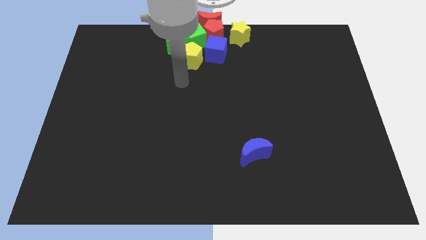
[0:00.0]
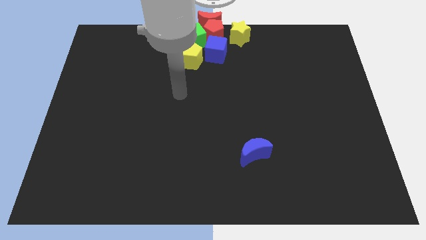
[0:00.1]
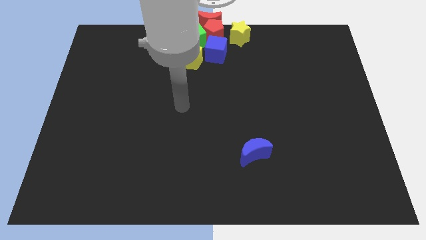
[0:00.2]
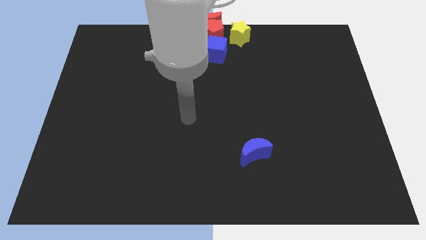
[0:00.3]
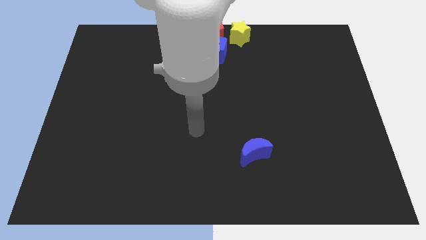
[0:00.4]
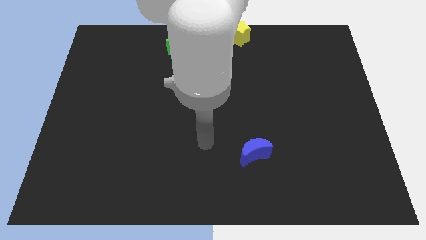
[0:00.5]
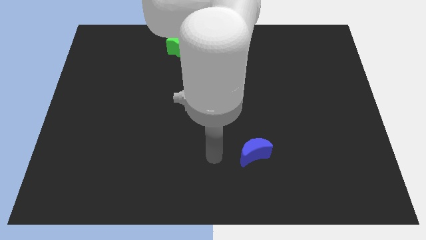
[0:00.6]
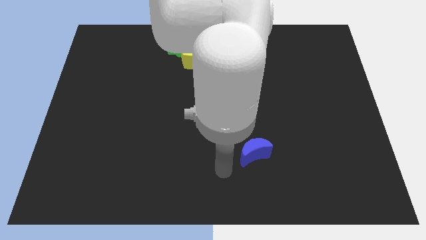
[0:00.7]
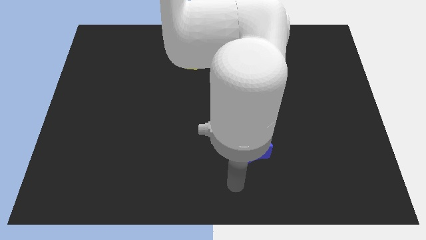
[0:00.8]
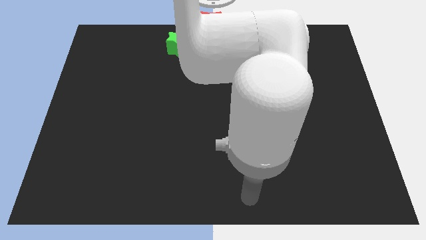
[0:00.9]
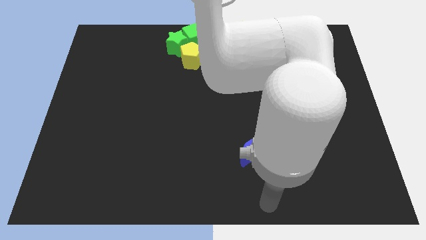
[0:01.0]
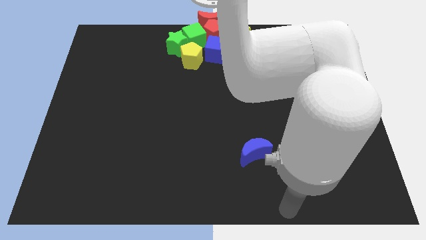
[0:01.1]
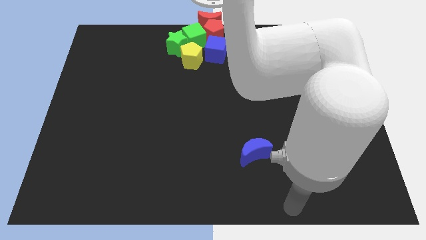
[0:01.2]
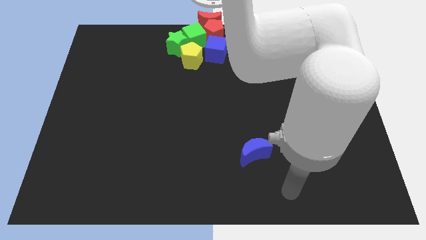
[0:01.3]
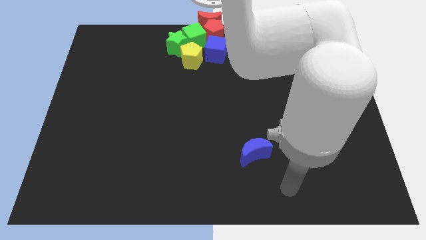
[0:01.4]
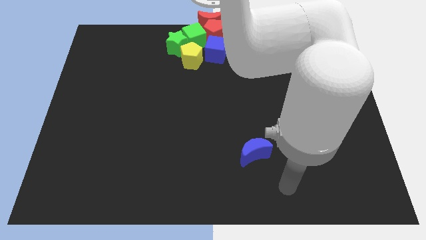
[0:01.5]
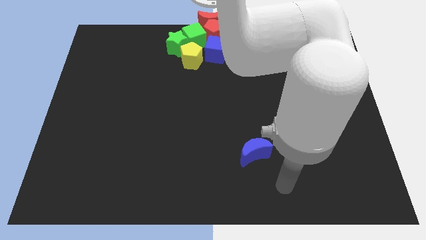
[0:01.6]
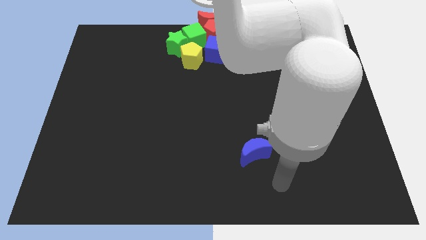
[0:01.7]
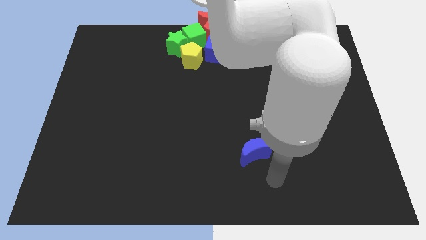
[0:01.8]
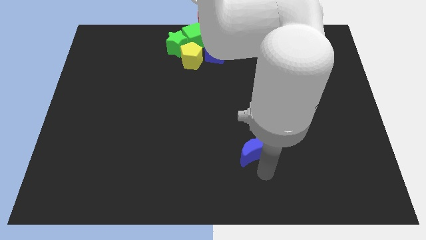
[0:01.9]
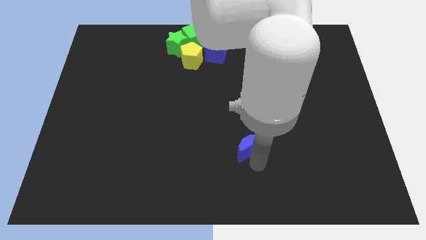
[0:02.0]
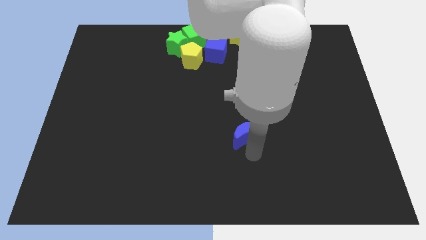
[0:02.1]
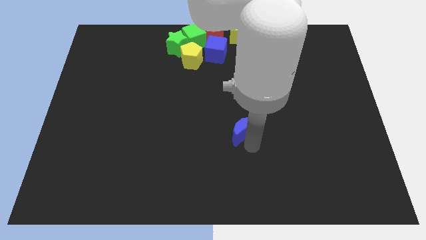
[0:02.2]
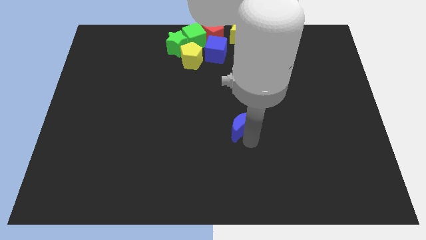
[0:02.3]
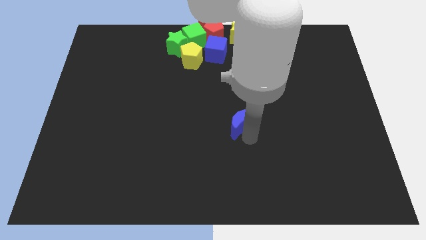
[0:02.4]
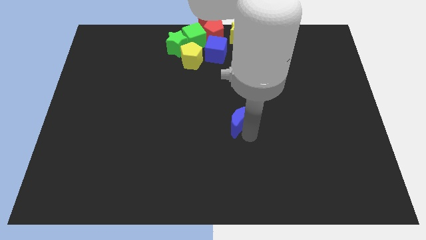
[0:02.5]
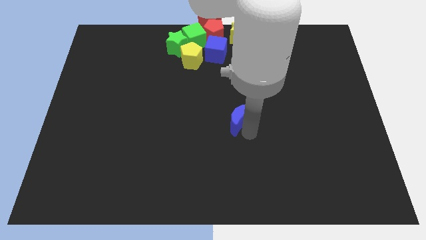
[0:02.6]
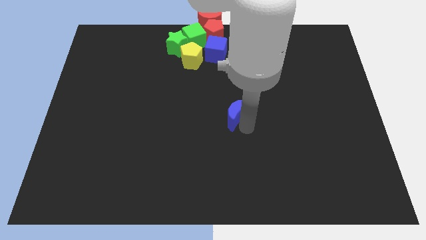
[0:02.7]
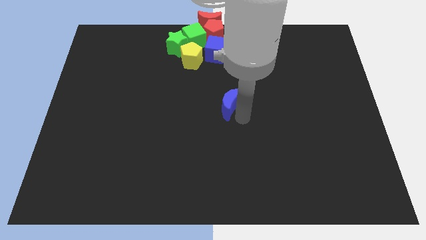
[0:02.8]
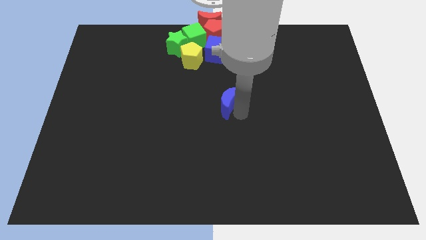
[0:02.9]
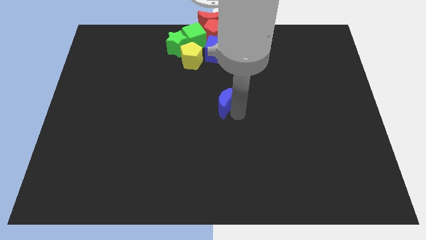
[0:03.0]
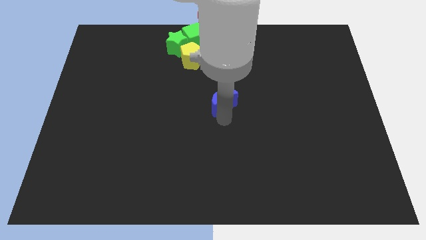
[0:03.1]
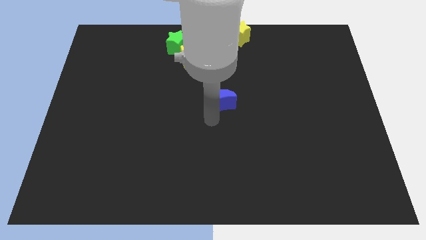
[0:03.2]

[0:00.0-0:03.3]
push the blue crescent towards the group of blocks

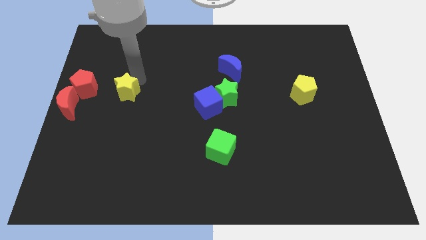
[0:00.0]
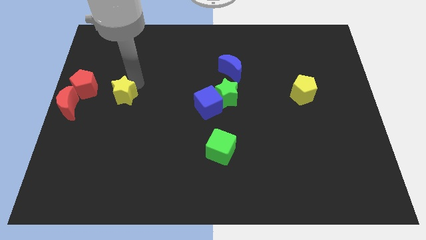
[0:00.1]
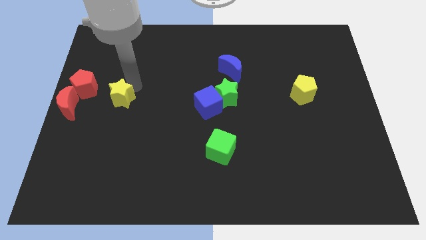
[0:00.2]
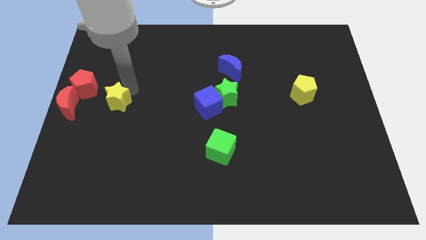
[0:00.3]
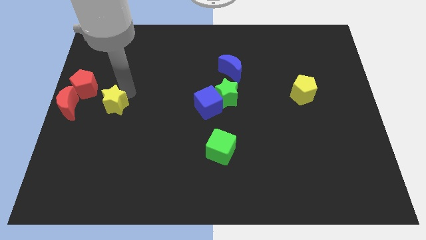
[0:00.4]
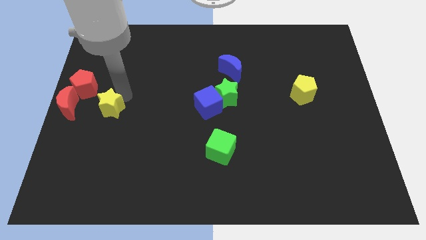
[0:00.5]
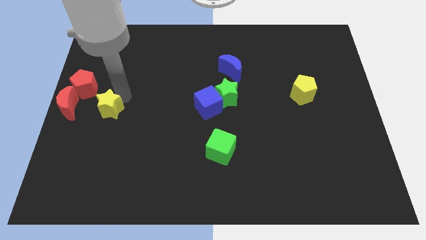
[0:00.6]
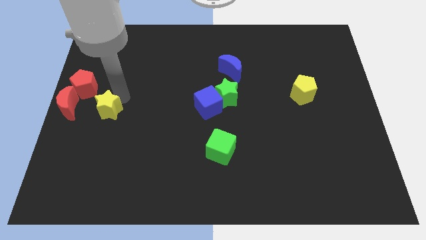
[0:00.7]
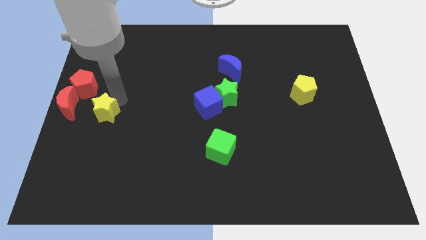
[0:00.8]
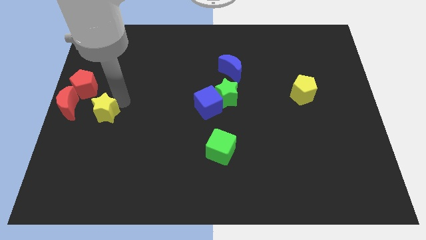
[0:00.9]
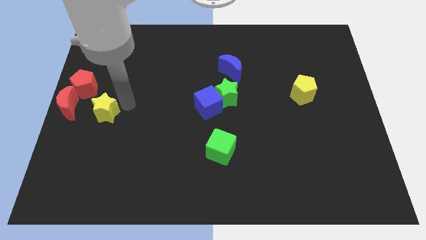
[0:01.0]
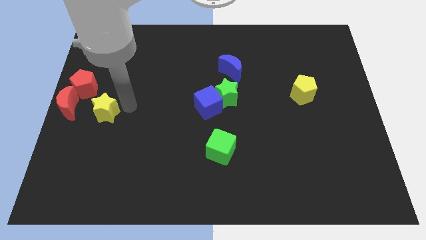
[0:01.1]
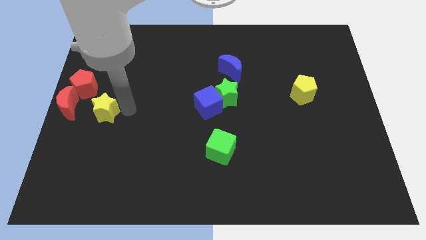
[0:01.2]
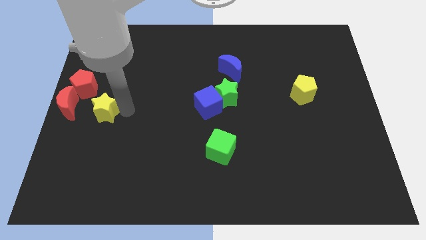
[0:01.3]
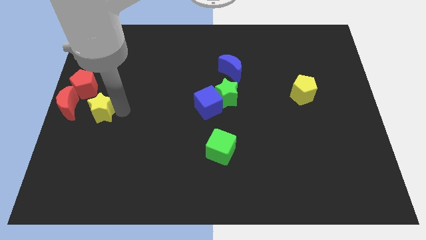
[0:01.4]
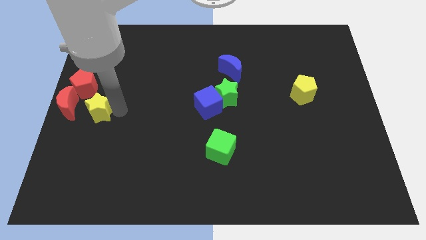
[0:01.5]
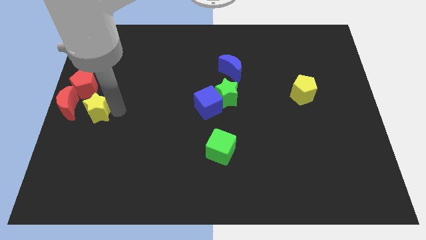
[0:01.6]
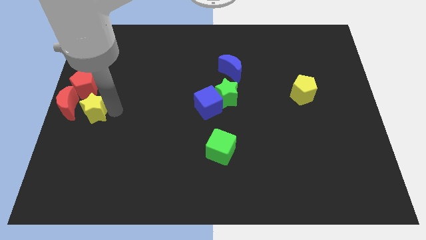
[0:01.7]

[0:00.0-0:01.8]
drag the yellow star diagonally to the bottom right to the red pentagon

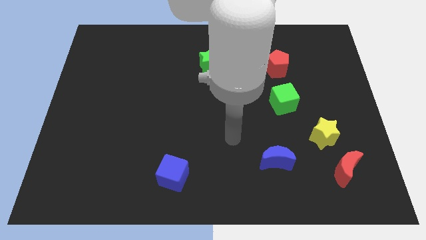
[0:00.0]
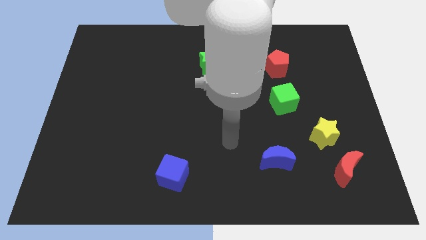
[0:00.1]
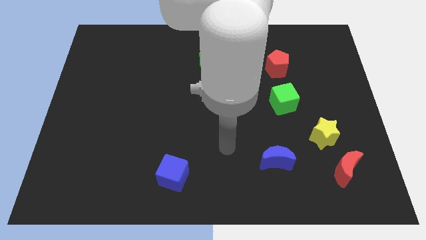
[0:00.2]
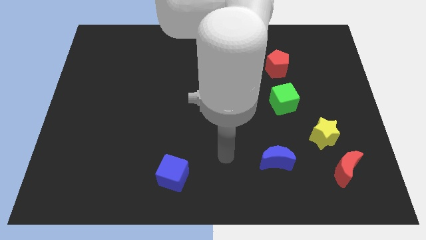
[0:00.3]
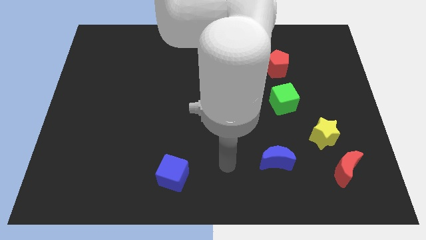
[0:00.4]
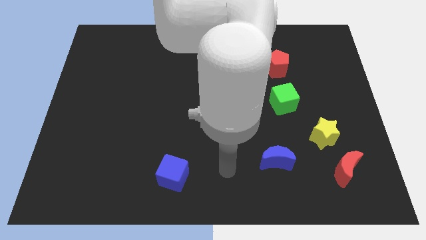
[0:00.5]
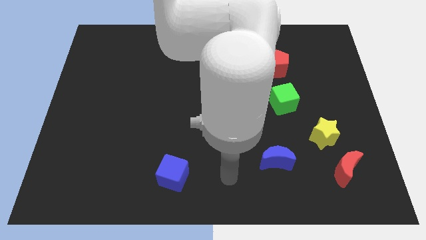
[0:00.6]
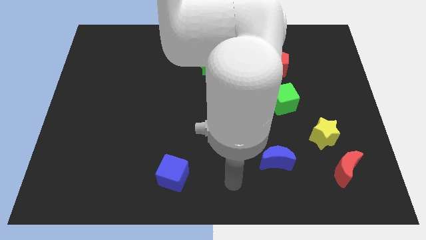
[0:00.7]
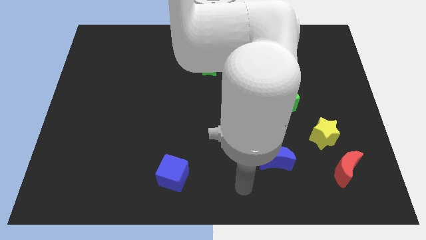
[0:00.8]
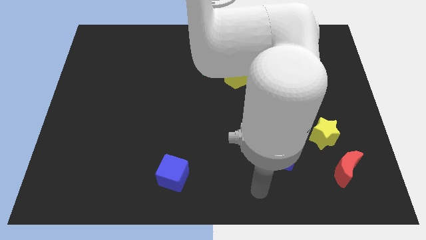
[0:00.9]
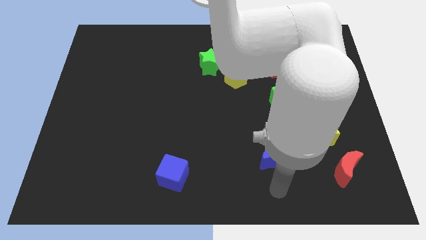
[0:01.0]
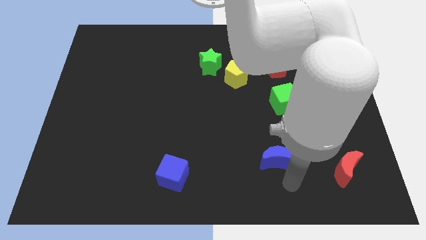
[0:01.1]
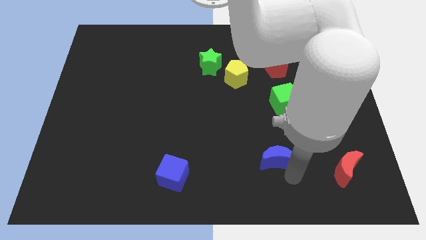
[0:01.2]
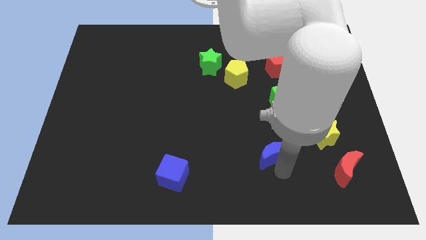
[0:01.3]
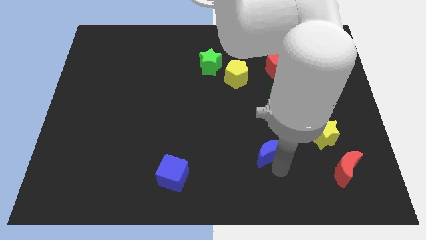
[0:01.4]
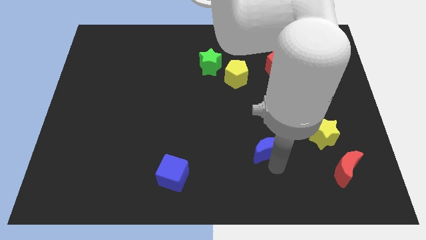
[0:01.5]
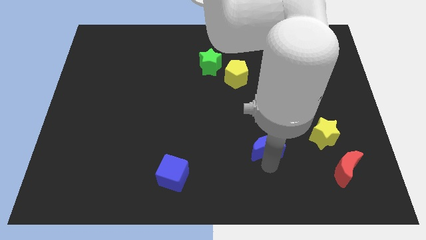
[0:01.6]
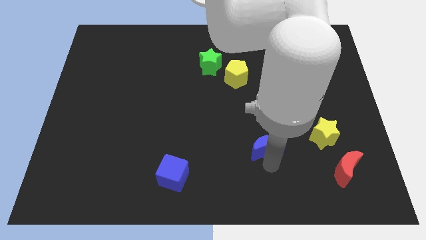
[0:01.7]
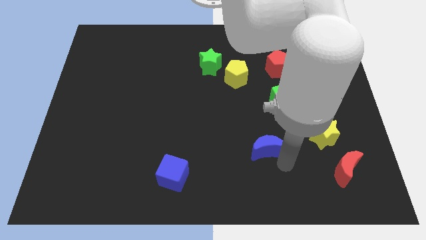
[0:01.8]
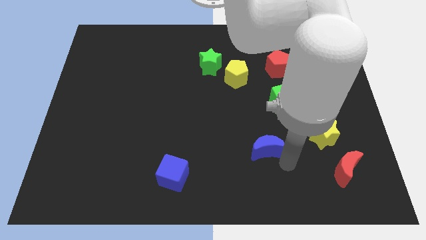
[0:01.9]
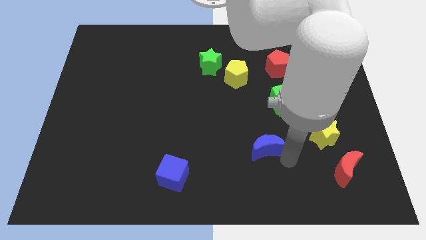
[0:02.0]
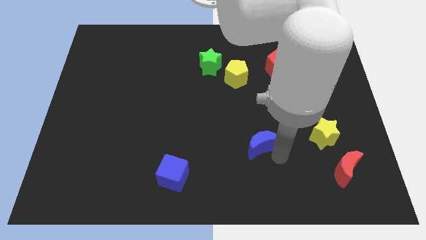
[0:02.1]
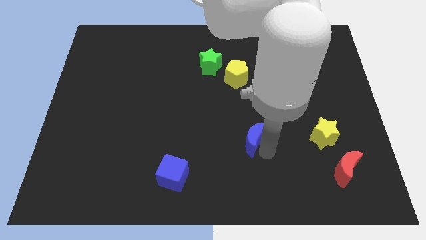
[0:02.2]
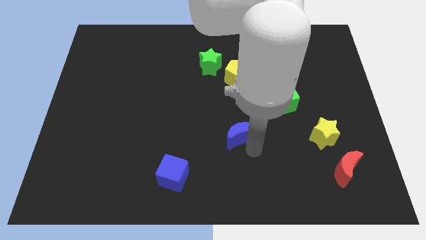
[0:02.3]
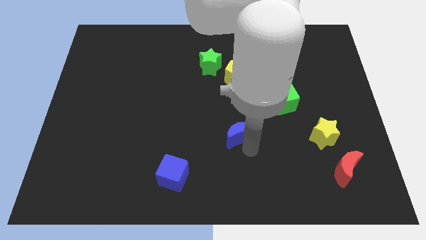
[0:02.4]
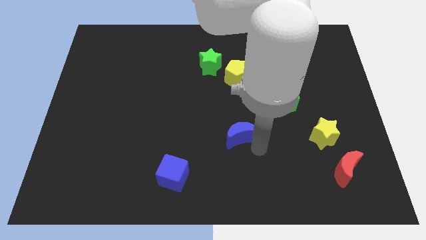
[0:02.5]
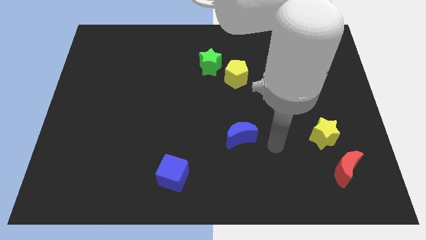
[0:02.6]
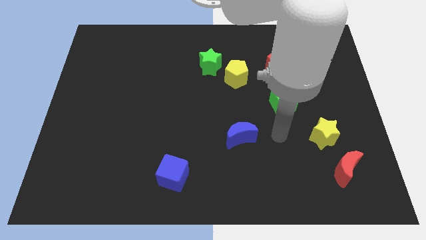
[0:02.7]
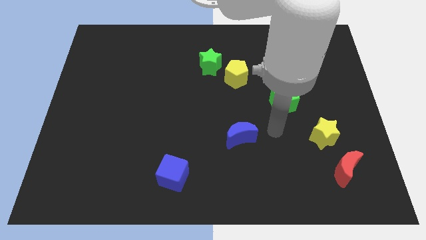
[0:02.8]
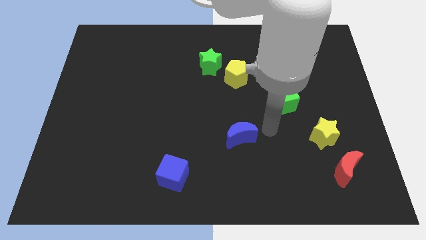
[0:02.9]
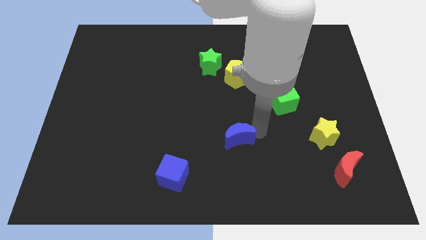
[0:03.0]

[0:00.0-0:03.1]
push the blue crescent to the left of the yellow star

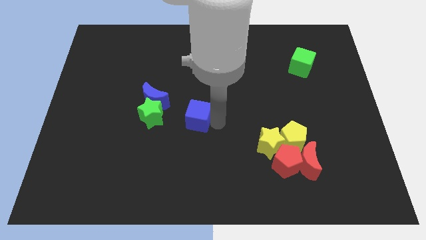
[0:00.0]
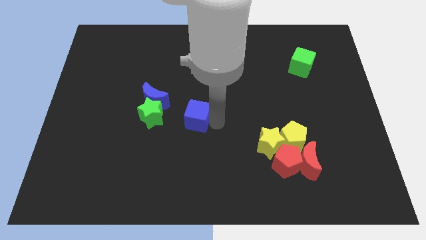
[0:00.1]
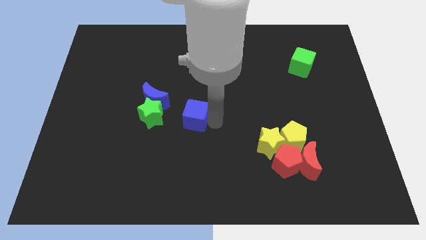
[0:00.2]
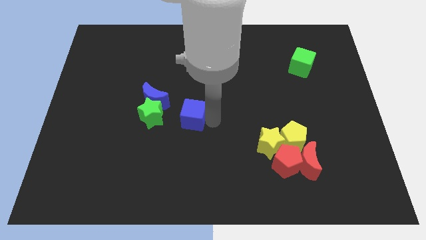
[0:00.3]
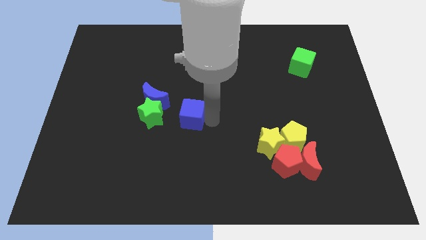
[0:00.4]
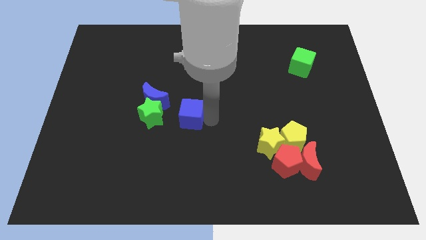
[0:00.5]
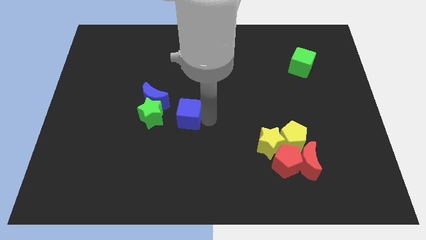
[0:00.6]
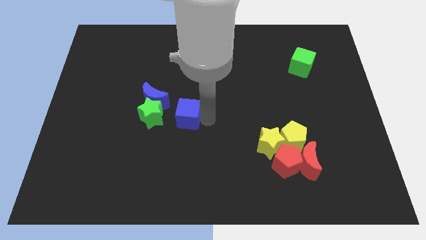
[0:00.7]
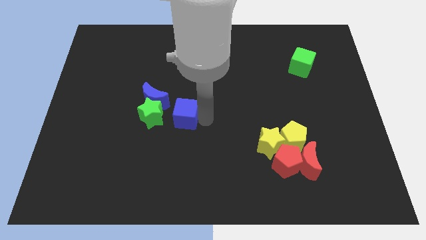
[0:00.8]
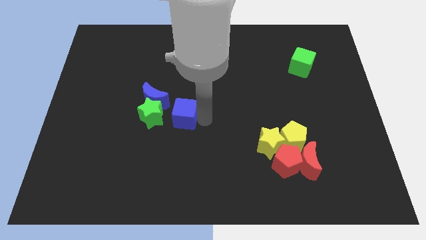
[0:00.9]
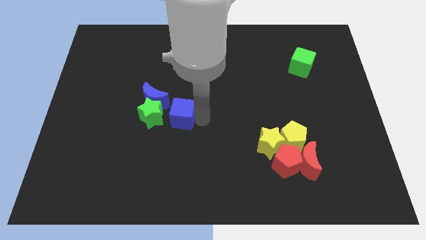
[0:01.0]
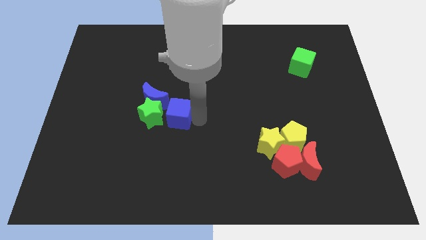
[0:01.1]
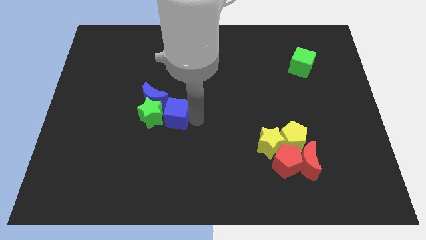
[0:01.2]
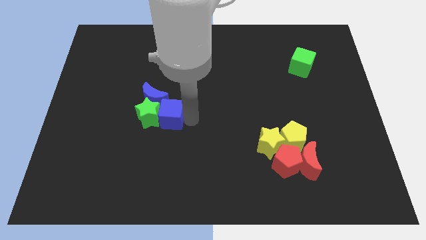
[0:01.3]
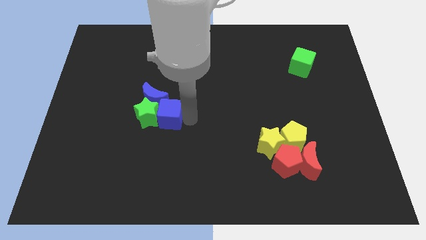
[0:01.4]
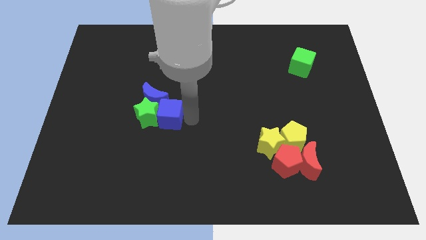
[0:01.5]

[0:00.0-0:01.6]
push the blue cube into the right side of the green star
